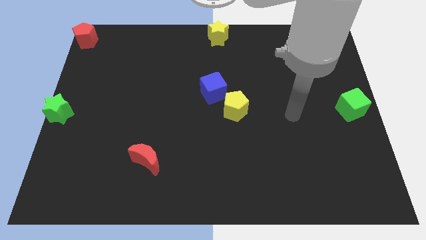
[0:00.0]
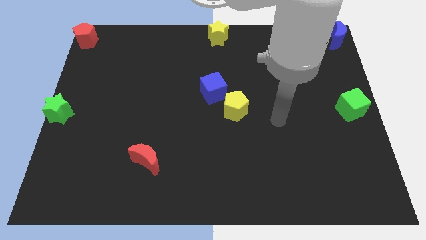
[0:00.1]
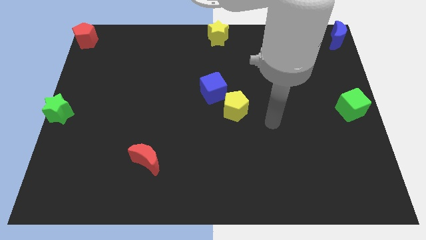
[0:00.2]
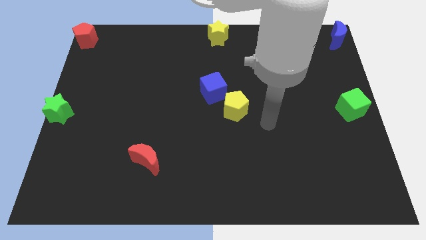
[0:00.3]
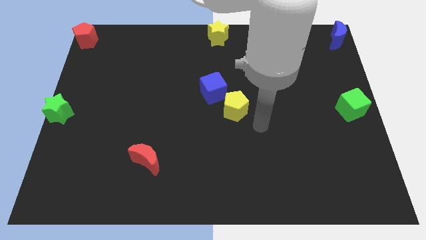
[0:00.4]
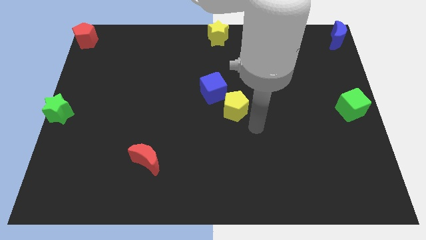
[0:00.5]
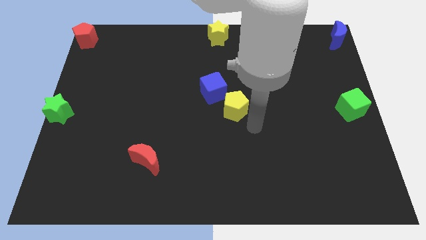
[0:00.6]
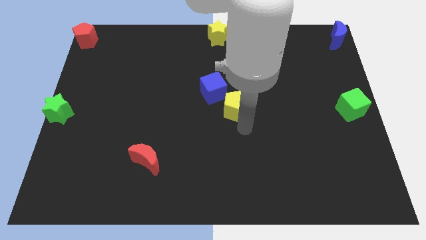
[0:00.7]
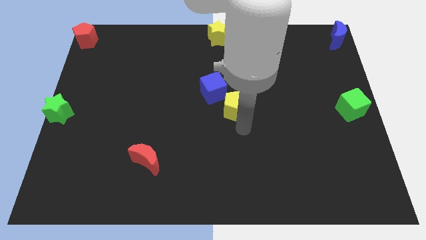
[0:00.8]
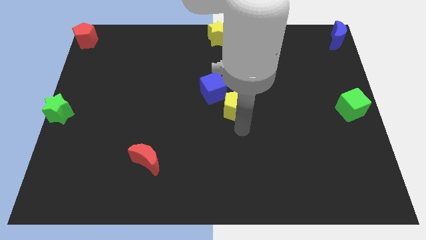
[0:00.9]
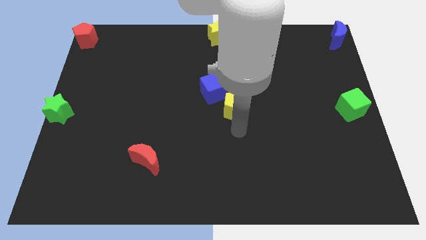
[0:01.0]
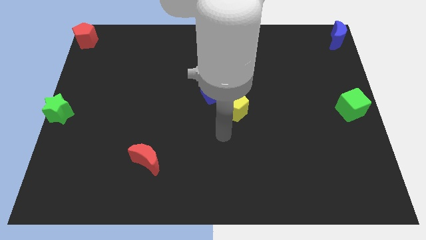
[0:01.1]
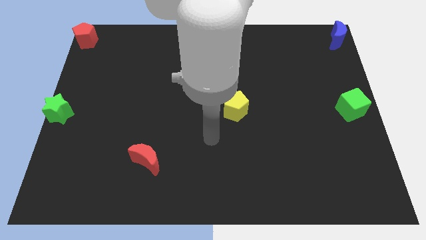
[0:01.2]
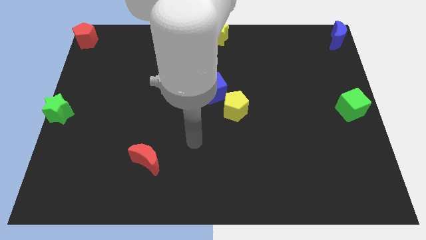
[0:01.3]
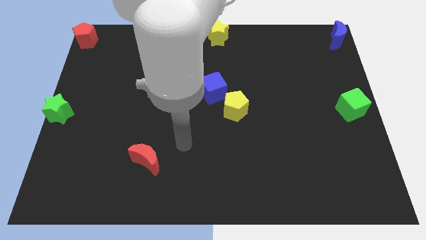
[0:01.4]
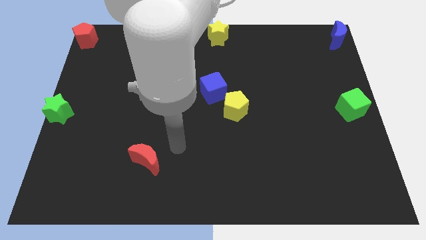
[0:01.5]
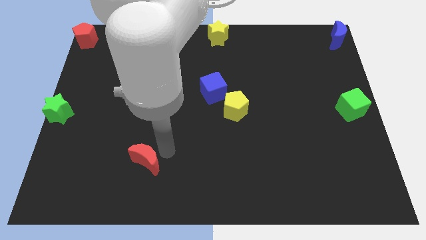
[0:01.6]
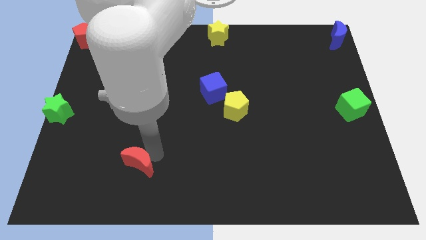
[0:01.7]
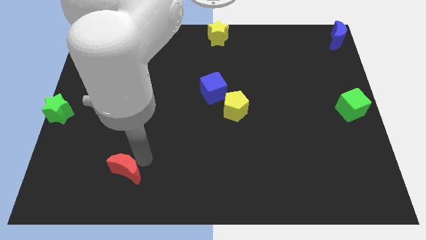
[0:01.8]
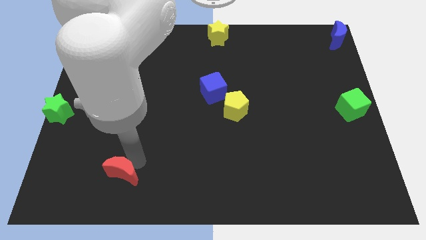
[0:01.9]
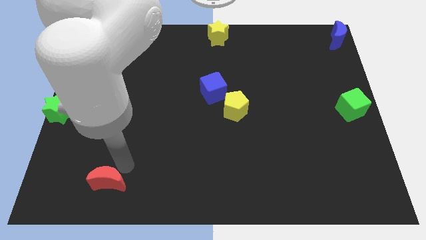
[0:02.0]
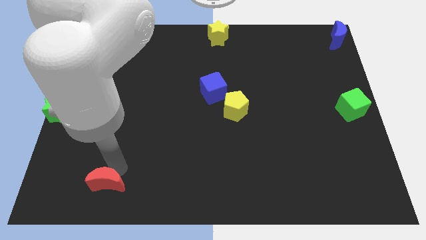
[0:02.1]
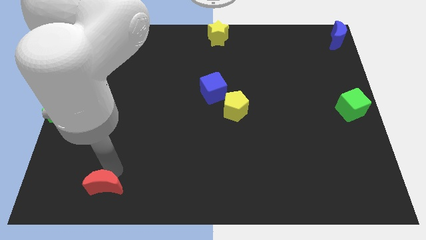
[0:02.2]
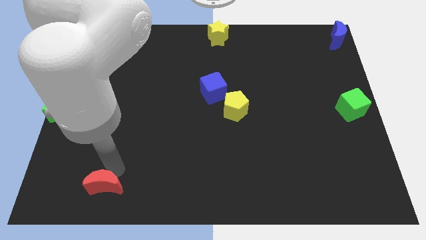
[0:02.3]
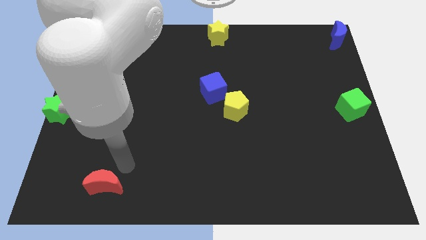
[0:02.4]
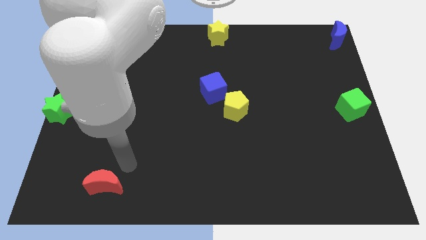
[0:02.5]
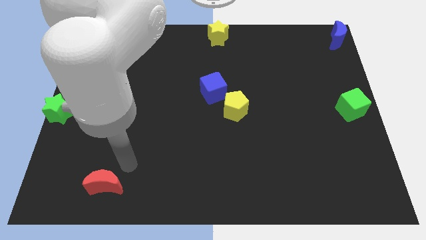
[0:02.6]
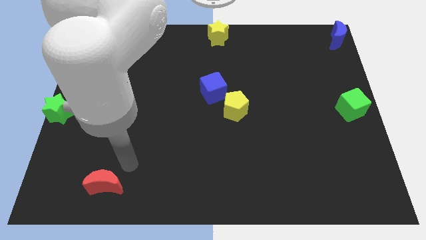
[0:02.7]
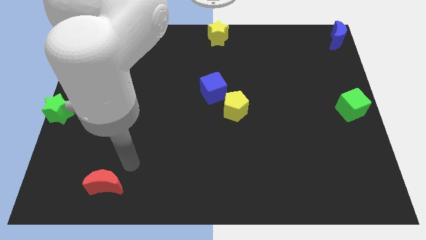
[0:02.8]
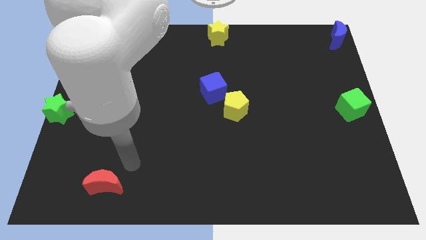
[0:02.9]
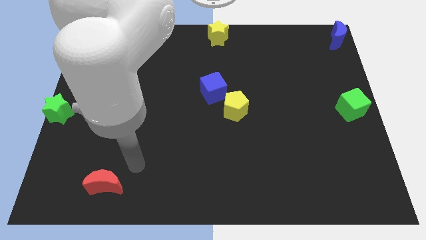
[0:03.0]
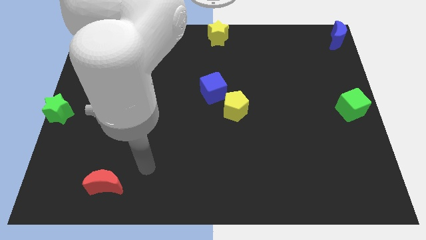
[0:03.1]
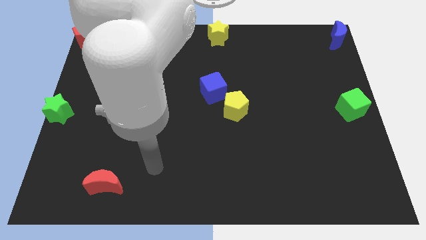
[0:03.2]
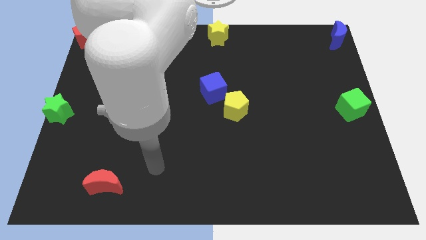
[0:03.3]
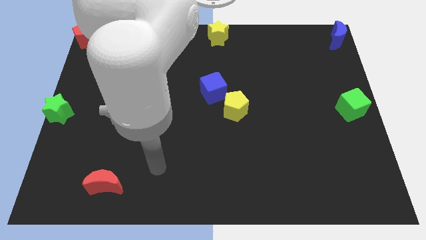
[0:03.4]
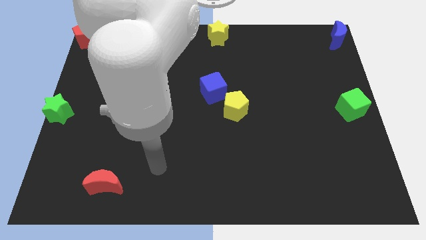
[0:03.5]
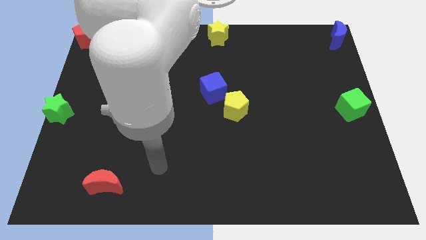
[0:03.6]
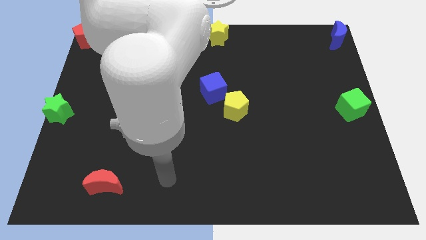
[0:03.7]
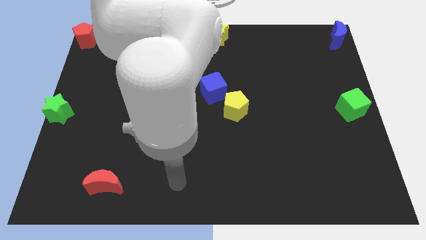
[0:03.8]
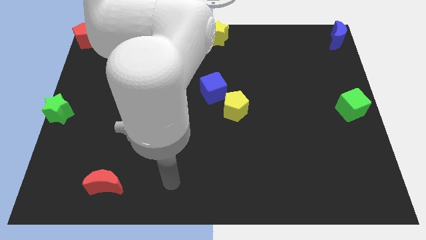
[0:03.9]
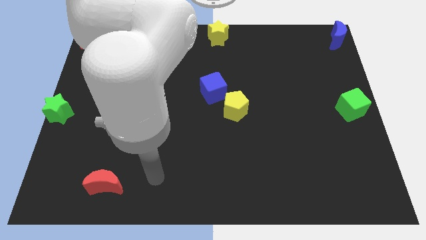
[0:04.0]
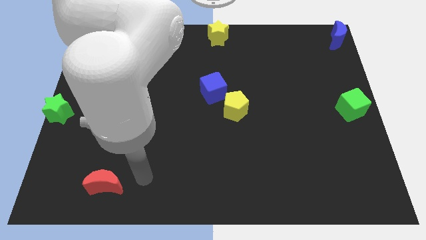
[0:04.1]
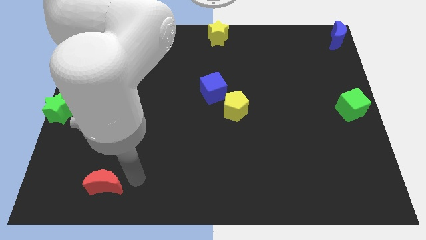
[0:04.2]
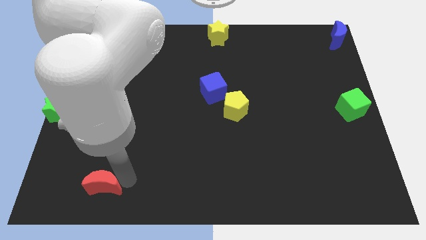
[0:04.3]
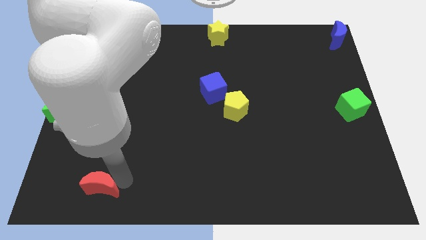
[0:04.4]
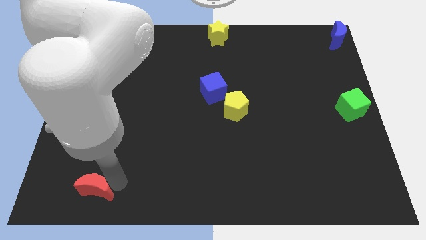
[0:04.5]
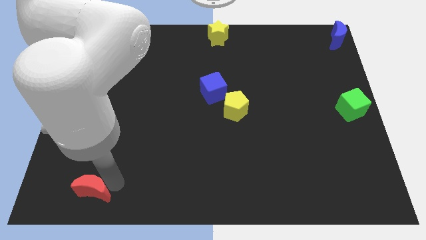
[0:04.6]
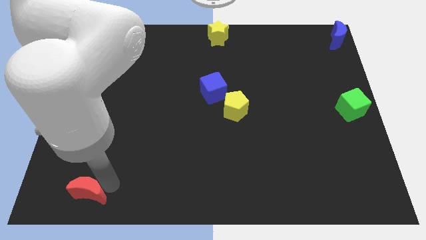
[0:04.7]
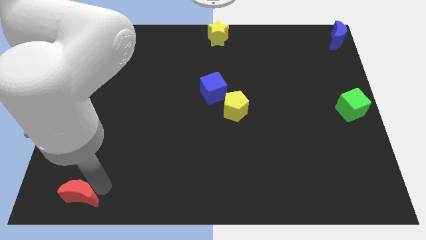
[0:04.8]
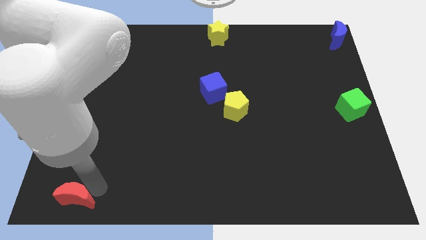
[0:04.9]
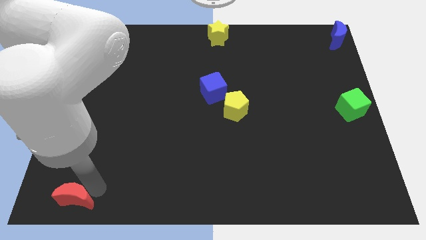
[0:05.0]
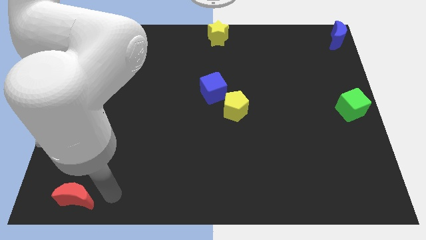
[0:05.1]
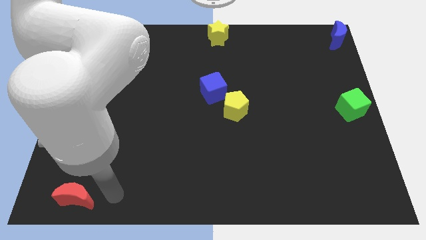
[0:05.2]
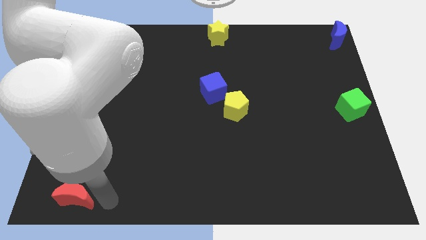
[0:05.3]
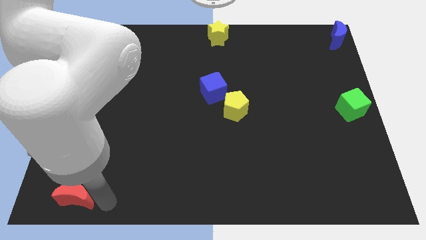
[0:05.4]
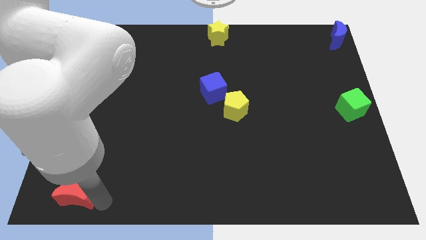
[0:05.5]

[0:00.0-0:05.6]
move the red crescent to the bottom left corner of the board

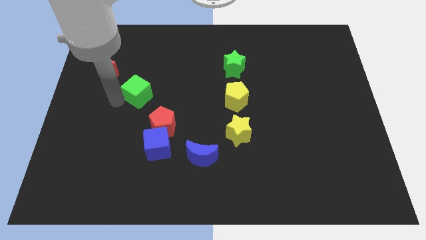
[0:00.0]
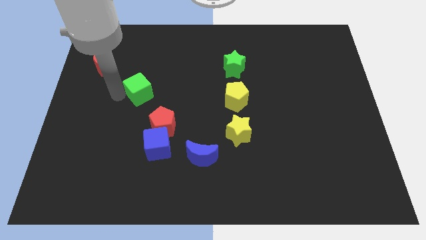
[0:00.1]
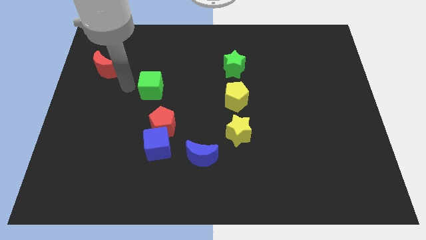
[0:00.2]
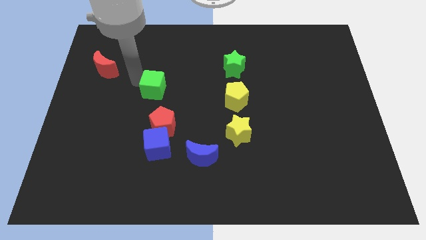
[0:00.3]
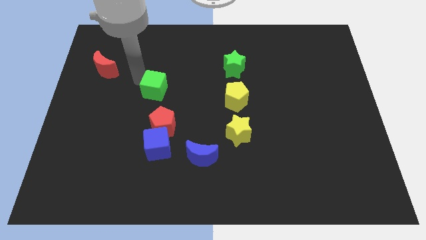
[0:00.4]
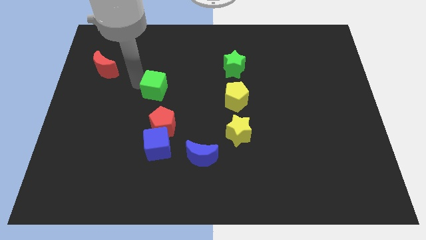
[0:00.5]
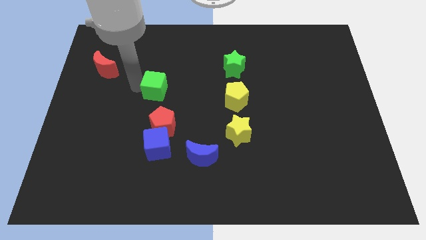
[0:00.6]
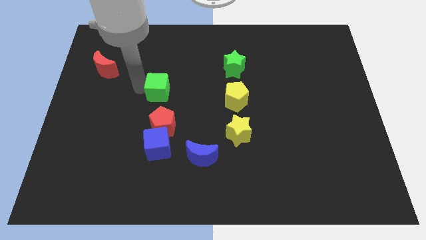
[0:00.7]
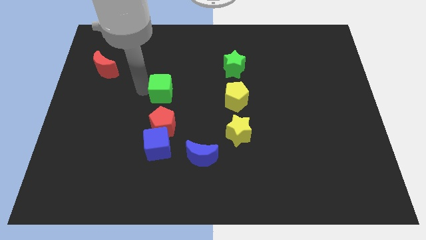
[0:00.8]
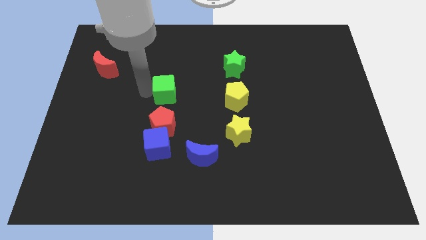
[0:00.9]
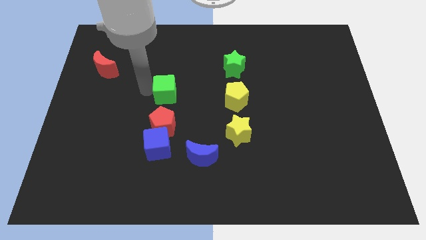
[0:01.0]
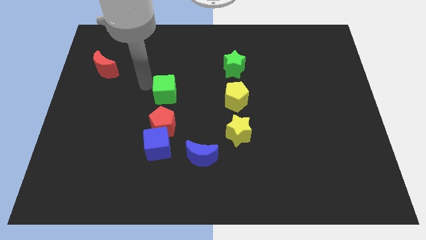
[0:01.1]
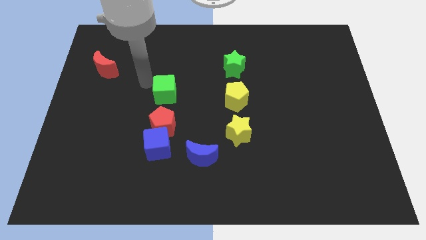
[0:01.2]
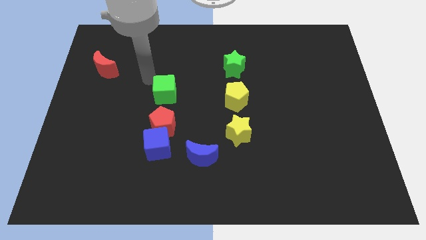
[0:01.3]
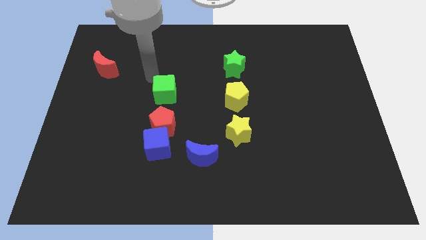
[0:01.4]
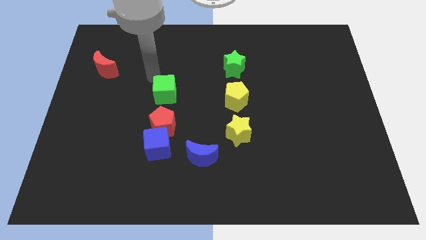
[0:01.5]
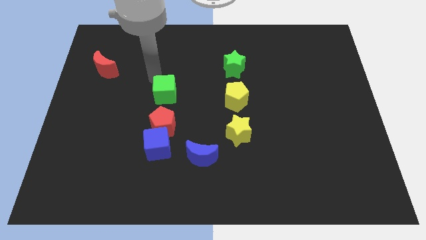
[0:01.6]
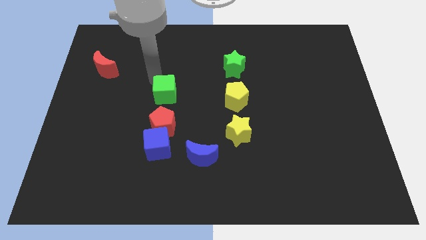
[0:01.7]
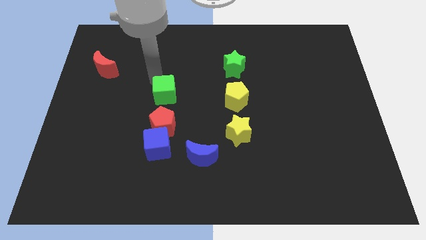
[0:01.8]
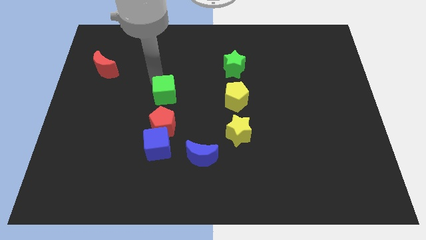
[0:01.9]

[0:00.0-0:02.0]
push the green cube on top of red pentagon

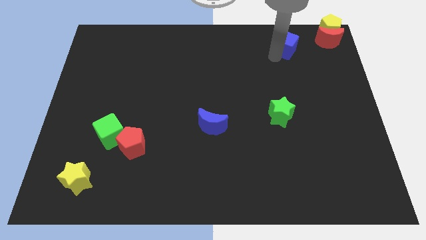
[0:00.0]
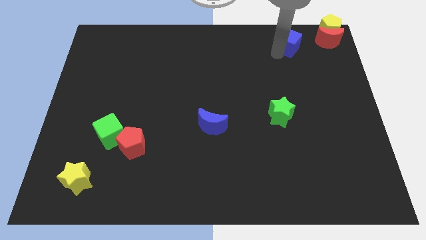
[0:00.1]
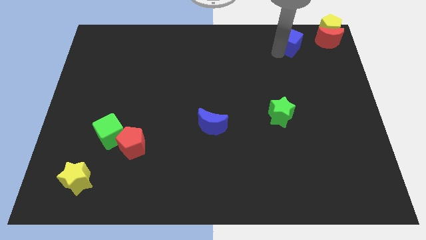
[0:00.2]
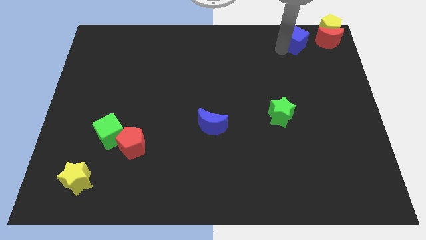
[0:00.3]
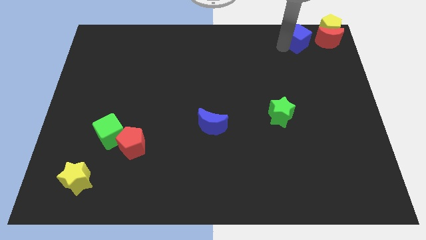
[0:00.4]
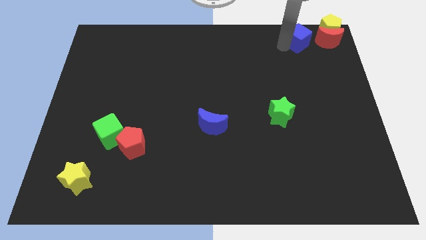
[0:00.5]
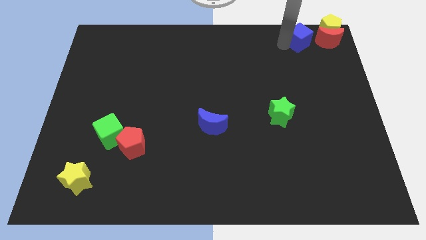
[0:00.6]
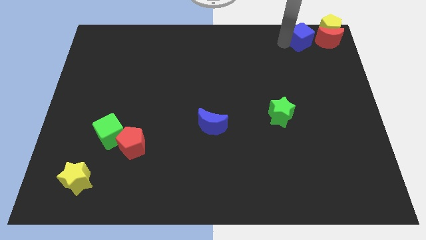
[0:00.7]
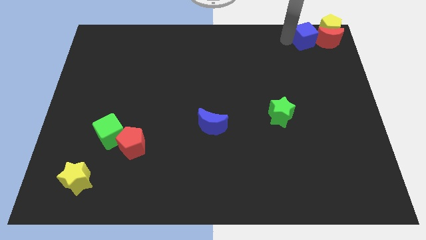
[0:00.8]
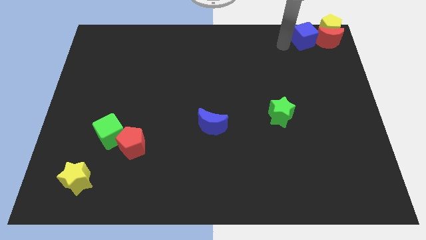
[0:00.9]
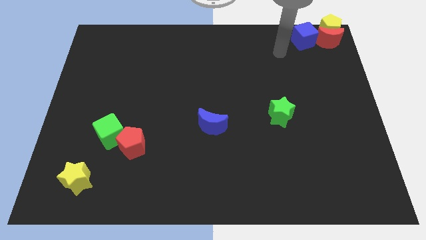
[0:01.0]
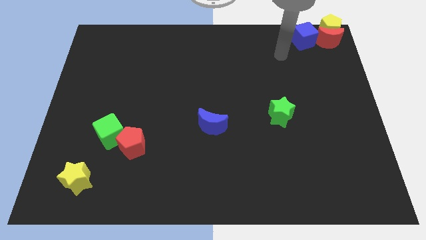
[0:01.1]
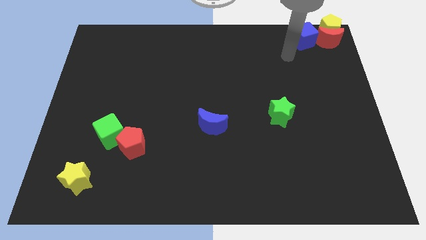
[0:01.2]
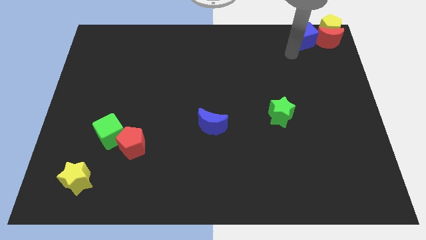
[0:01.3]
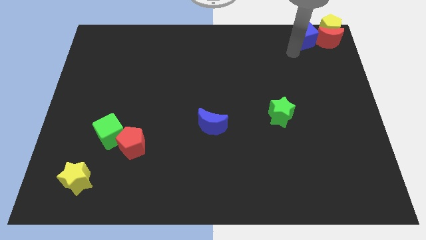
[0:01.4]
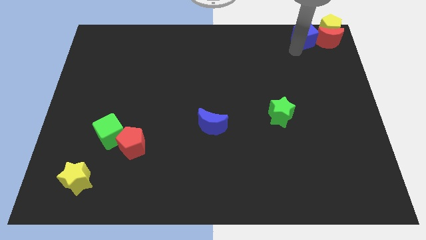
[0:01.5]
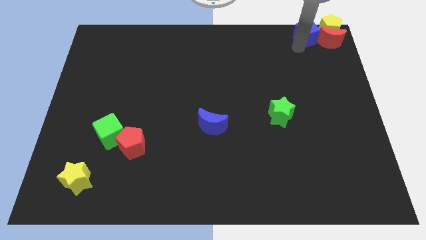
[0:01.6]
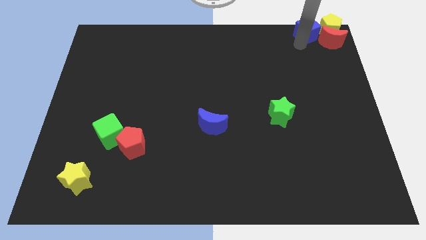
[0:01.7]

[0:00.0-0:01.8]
push the blue cube into the red moon
